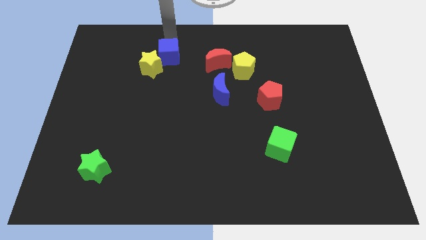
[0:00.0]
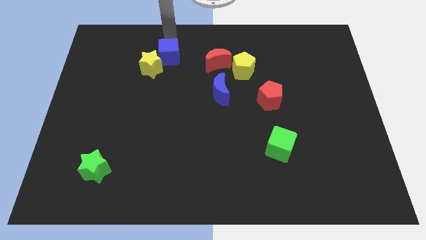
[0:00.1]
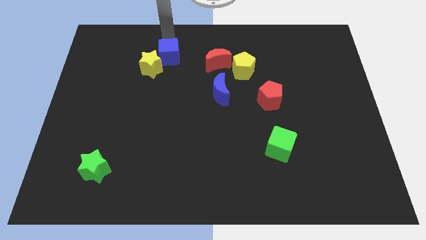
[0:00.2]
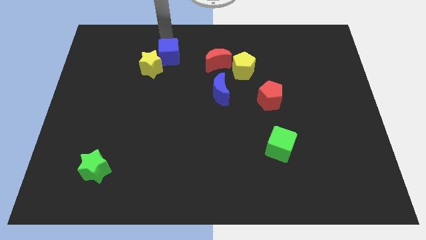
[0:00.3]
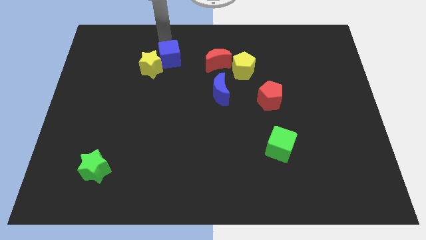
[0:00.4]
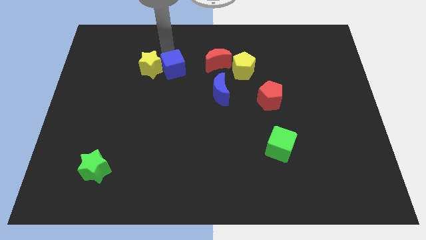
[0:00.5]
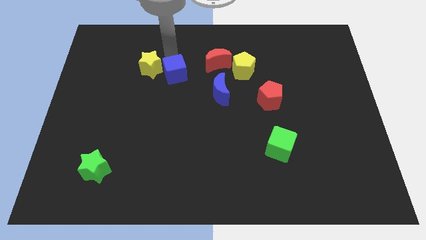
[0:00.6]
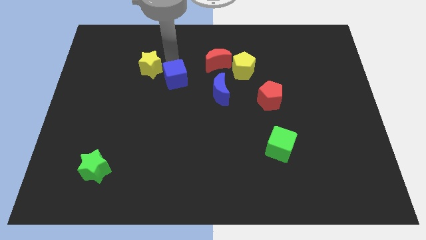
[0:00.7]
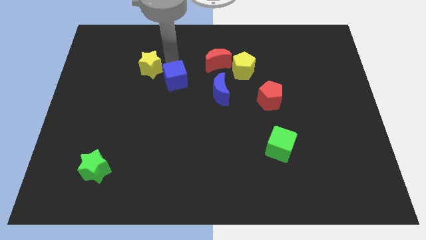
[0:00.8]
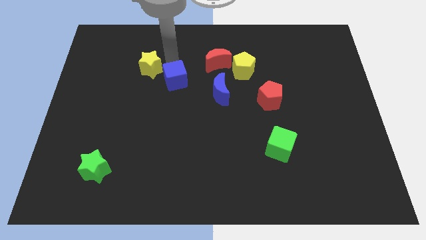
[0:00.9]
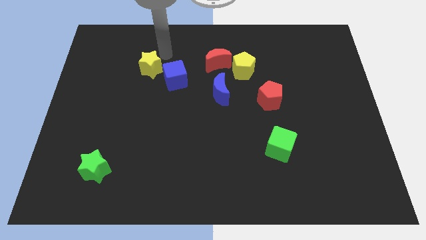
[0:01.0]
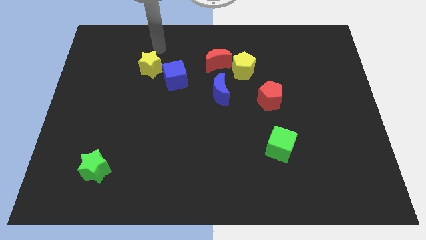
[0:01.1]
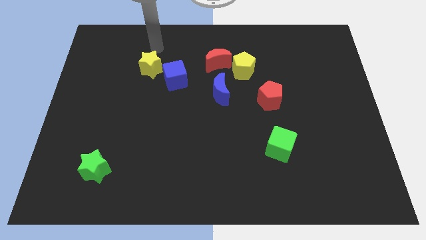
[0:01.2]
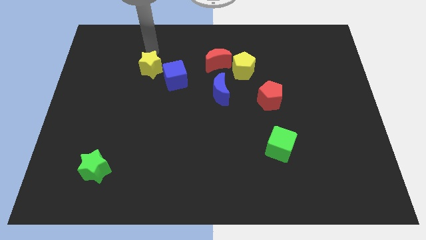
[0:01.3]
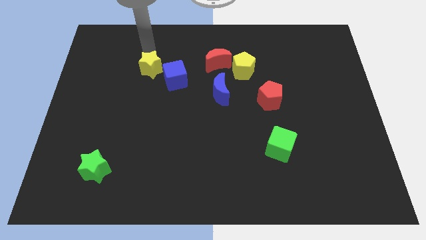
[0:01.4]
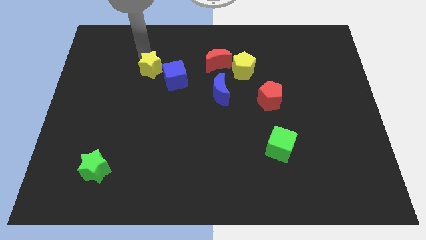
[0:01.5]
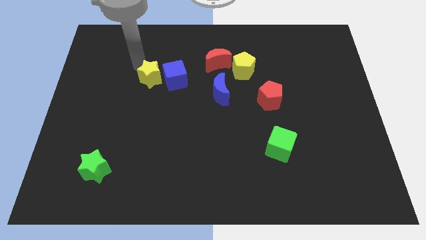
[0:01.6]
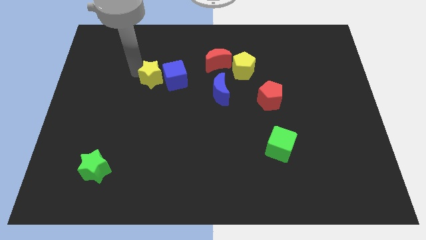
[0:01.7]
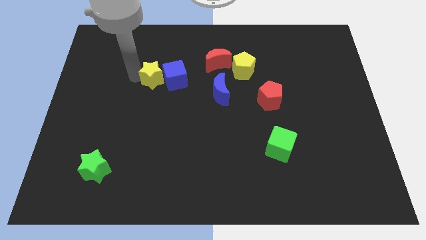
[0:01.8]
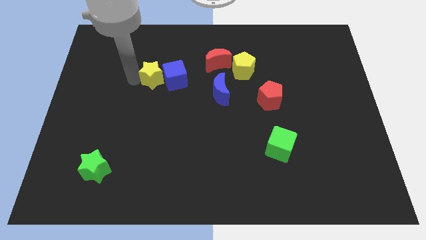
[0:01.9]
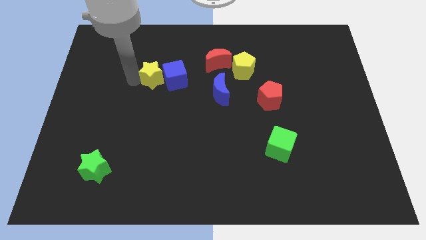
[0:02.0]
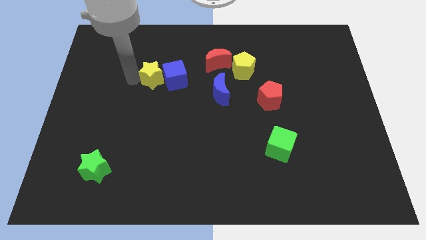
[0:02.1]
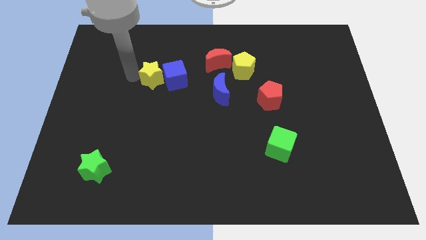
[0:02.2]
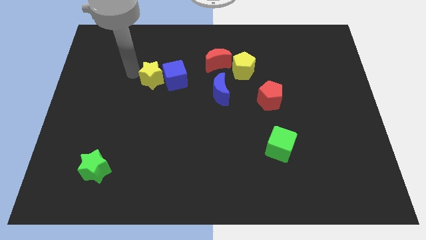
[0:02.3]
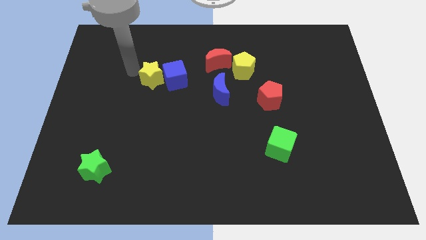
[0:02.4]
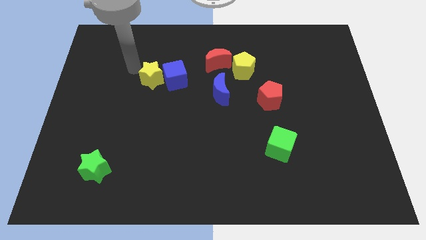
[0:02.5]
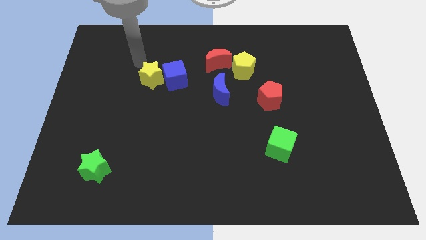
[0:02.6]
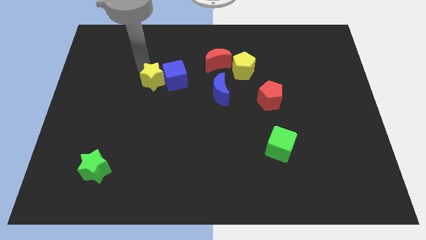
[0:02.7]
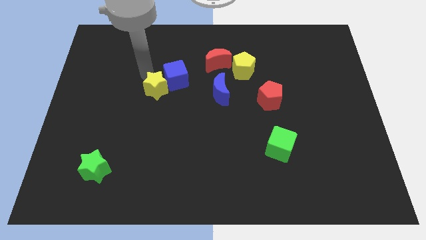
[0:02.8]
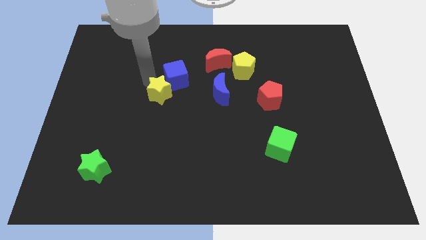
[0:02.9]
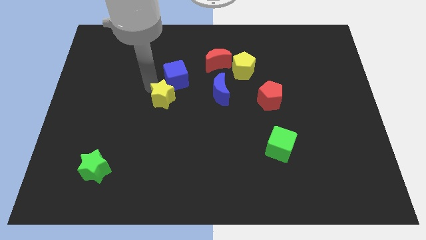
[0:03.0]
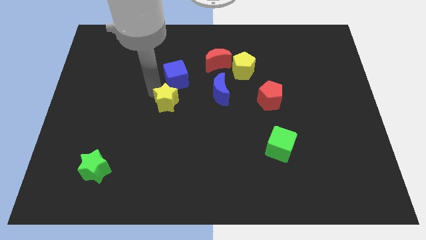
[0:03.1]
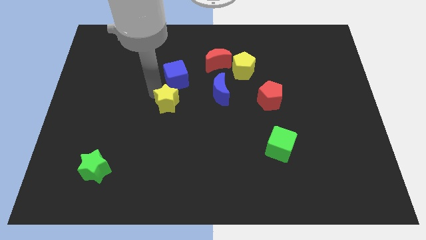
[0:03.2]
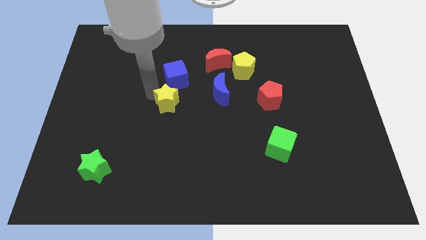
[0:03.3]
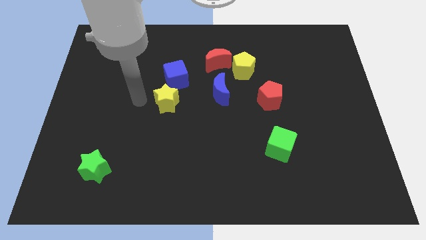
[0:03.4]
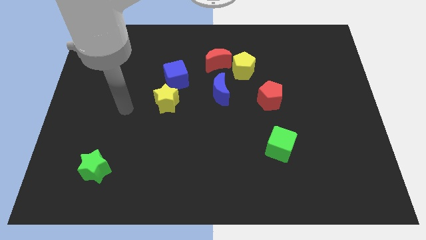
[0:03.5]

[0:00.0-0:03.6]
separate yellow star and blue moon

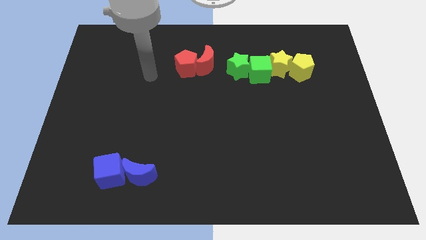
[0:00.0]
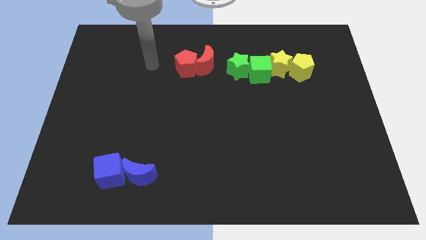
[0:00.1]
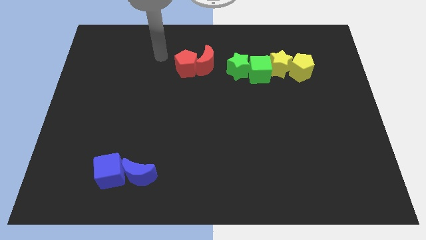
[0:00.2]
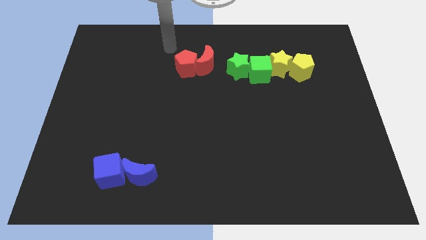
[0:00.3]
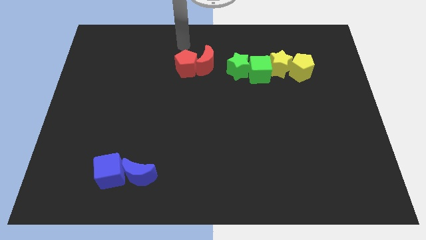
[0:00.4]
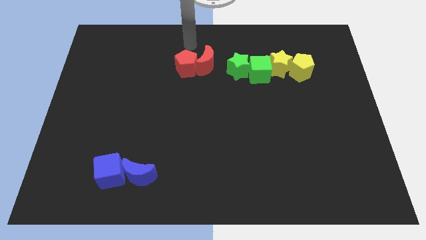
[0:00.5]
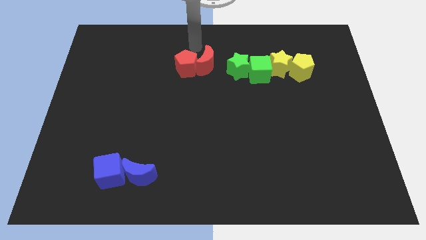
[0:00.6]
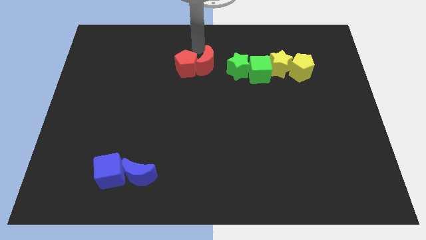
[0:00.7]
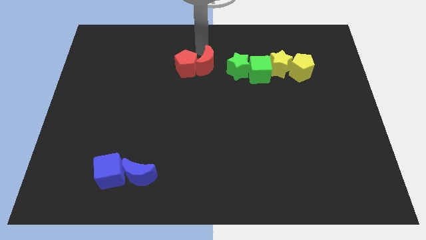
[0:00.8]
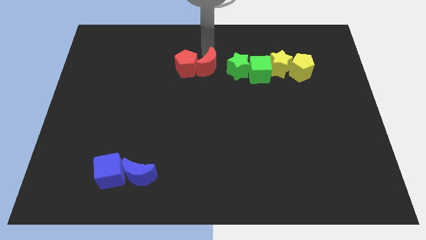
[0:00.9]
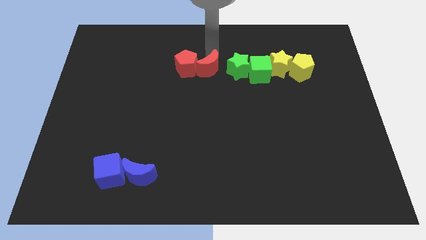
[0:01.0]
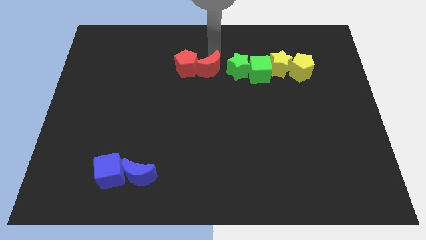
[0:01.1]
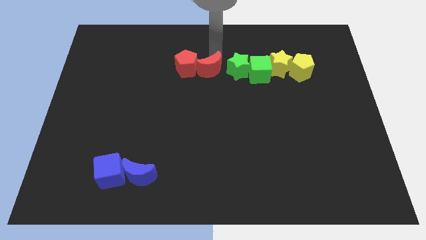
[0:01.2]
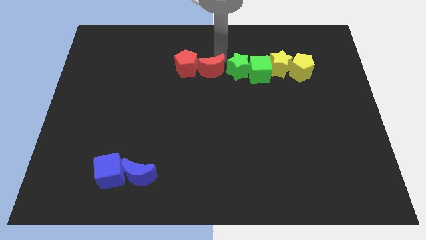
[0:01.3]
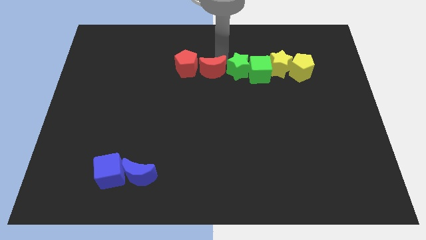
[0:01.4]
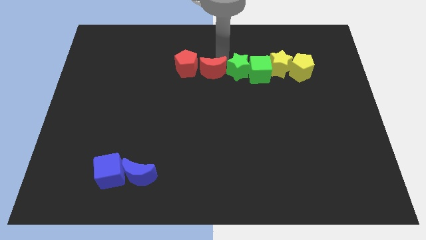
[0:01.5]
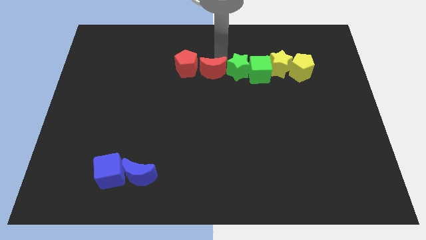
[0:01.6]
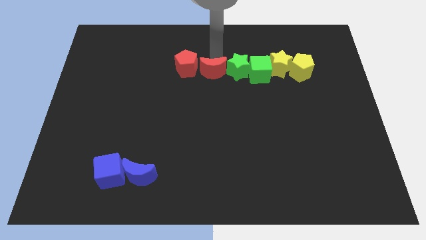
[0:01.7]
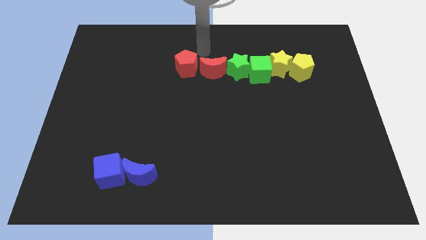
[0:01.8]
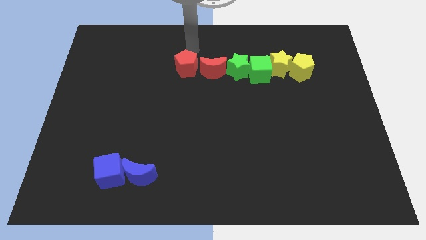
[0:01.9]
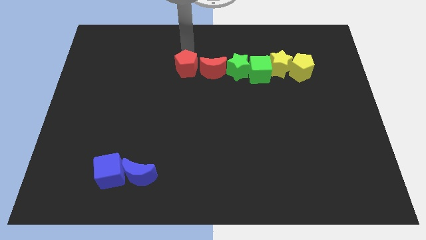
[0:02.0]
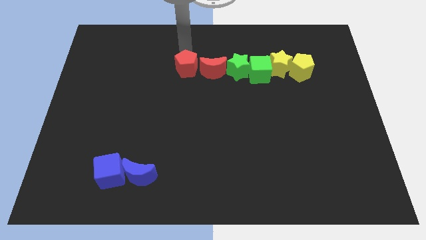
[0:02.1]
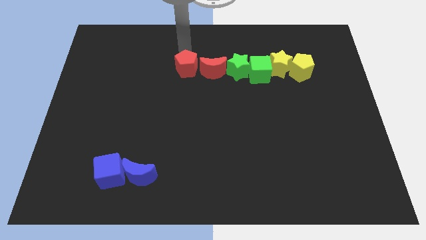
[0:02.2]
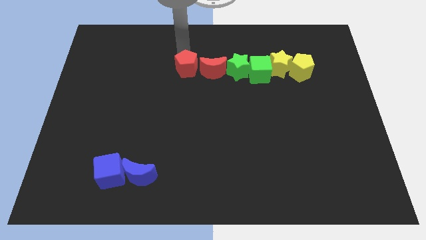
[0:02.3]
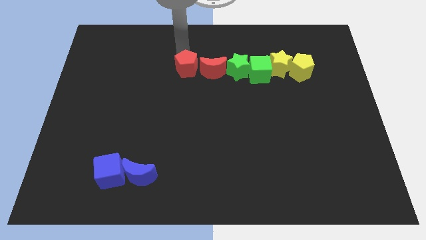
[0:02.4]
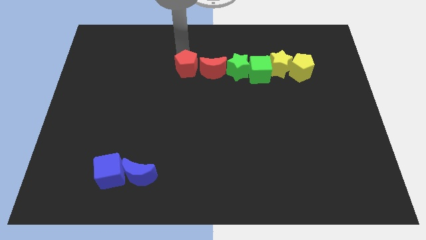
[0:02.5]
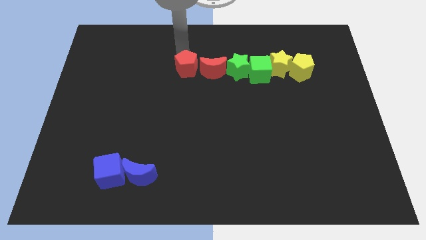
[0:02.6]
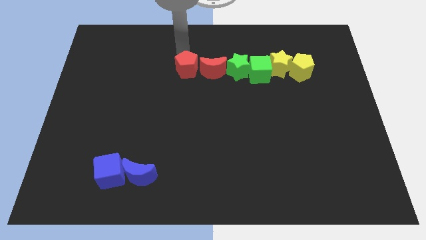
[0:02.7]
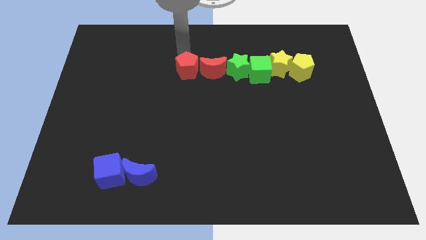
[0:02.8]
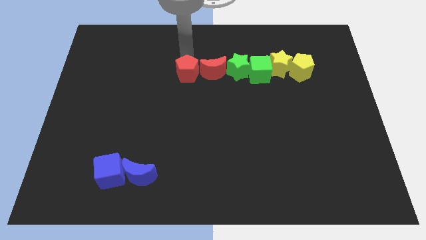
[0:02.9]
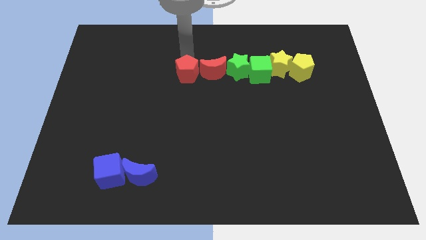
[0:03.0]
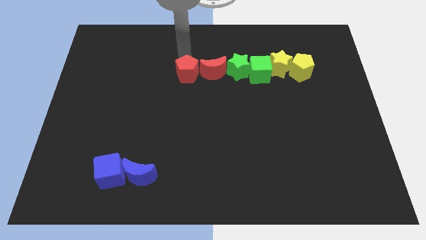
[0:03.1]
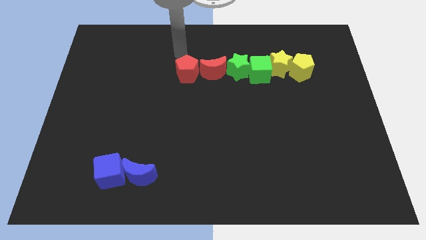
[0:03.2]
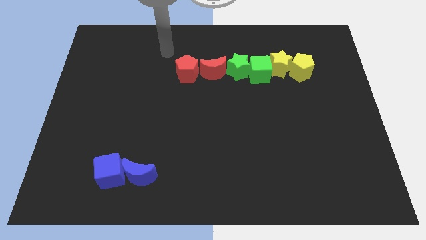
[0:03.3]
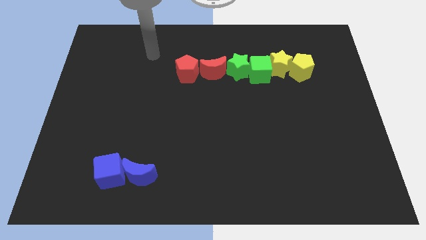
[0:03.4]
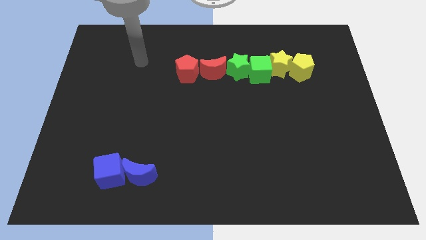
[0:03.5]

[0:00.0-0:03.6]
arrange the red blocks at the left side of the green star

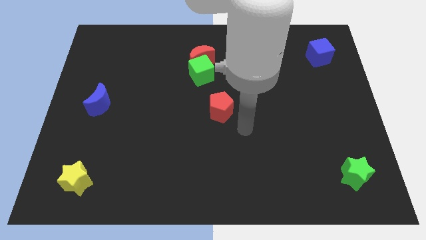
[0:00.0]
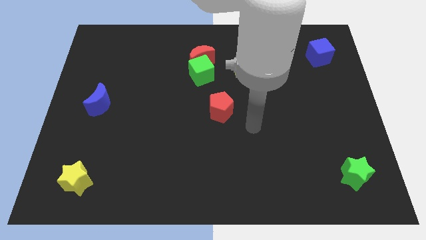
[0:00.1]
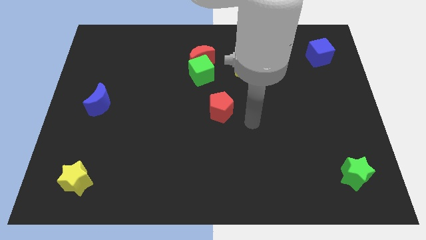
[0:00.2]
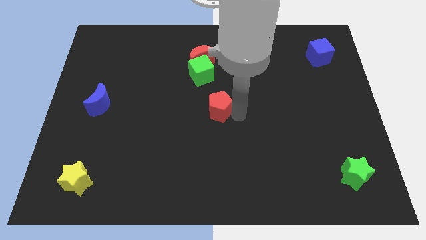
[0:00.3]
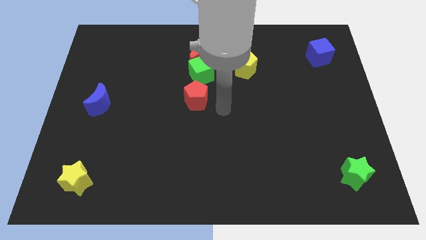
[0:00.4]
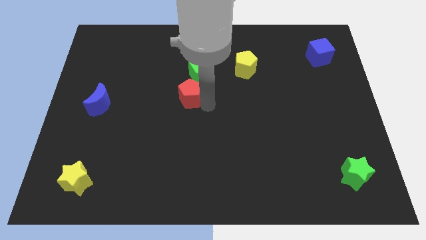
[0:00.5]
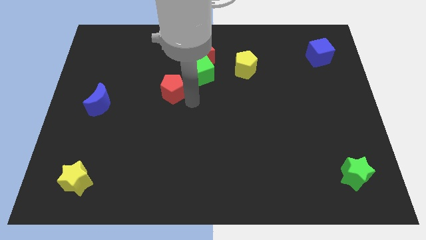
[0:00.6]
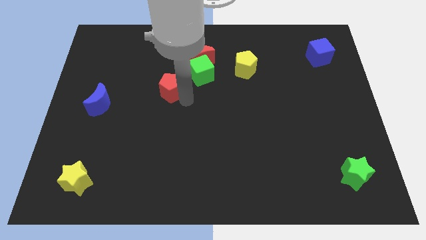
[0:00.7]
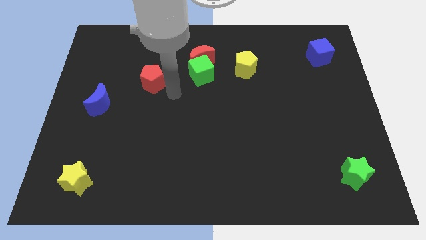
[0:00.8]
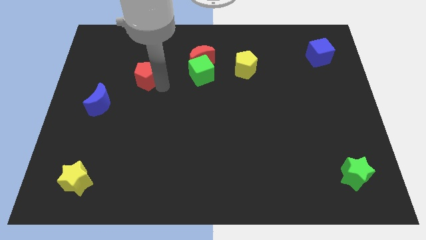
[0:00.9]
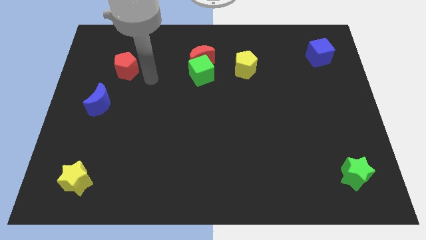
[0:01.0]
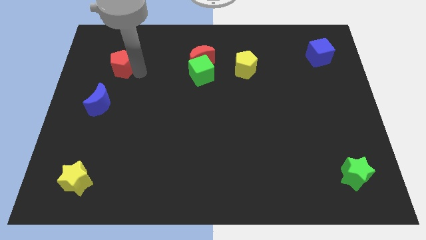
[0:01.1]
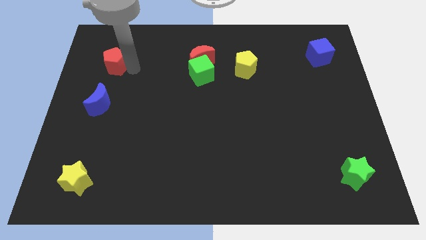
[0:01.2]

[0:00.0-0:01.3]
slide the red pentagon parallel to the green cube

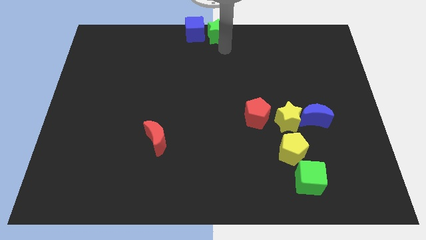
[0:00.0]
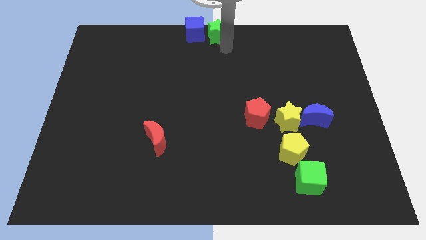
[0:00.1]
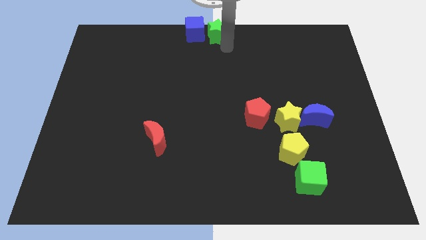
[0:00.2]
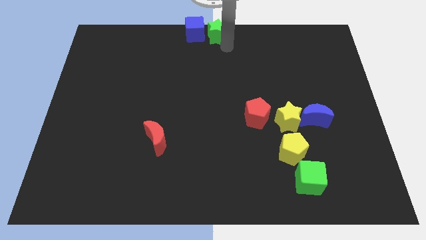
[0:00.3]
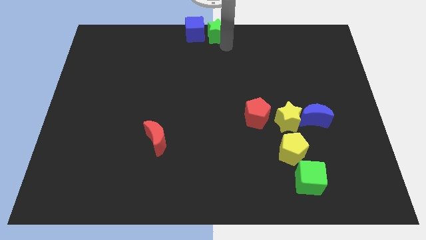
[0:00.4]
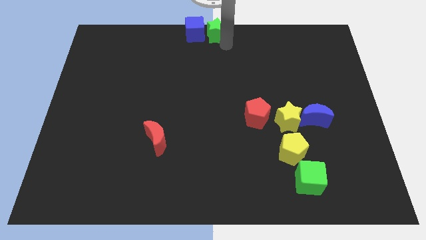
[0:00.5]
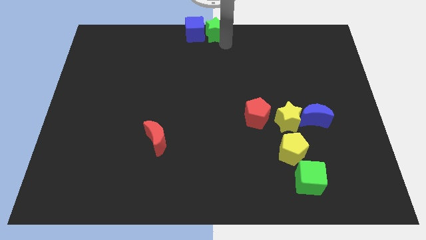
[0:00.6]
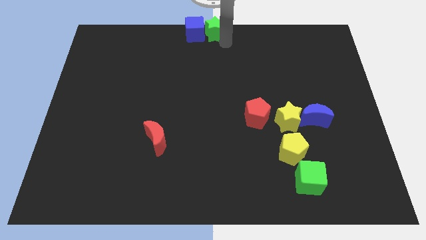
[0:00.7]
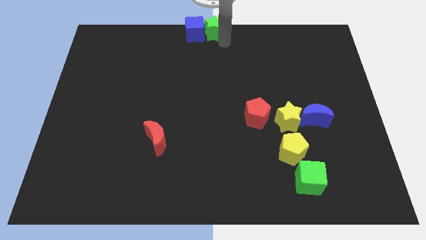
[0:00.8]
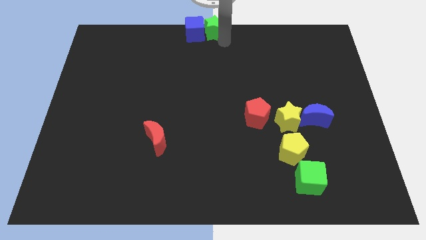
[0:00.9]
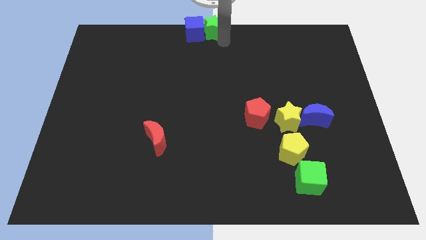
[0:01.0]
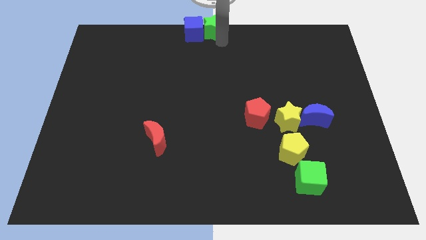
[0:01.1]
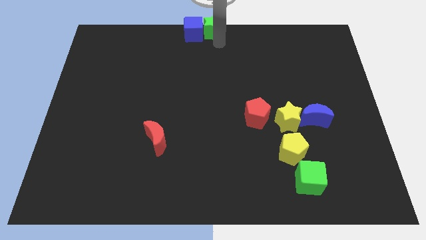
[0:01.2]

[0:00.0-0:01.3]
place the green star to the right side of blue cube
